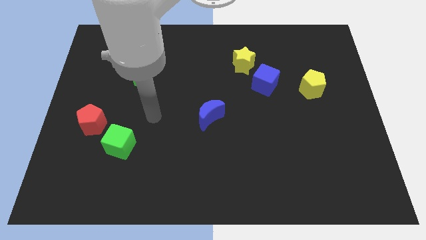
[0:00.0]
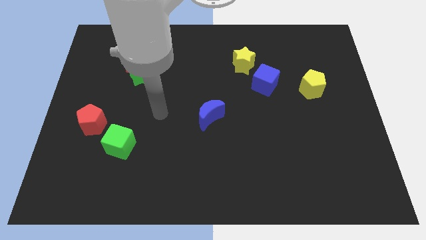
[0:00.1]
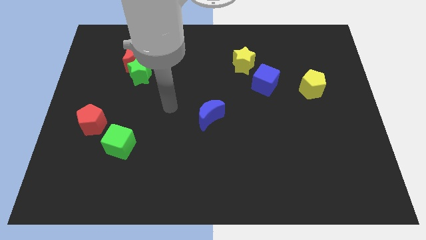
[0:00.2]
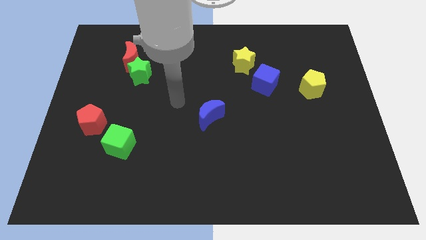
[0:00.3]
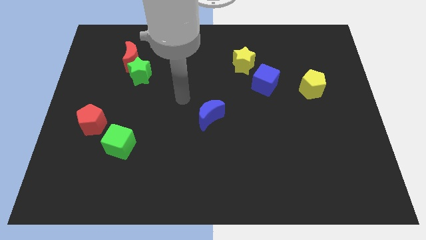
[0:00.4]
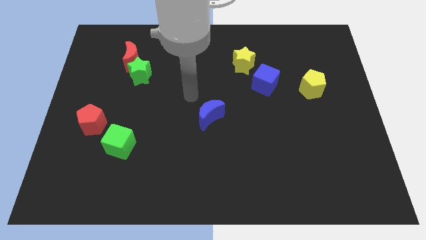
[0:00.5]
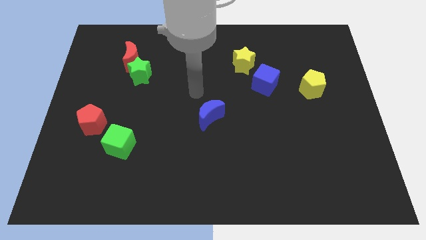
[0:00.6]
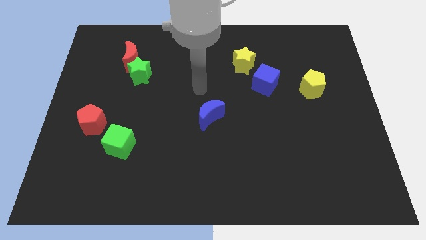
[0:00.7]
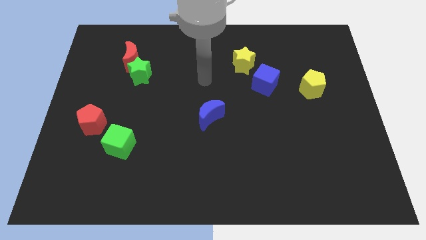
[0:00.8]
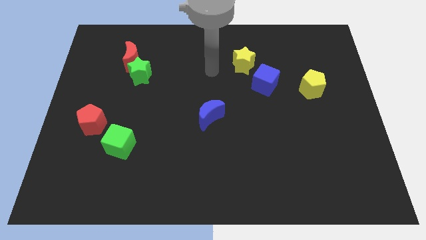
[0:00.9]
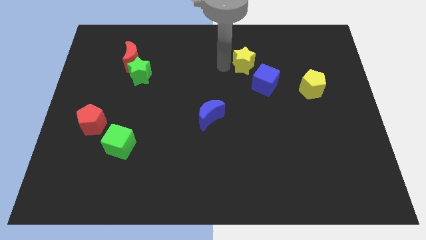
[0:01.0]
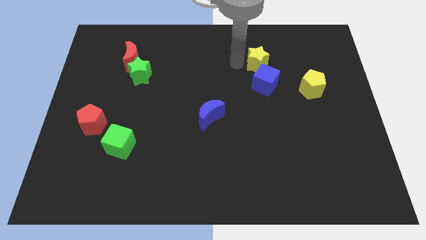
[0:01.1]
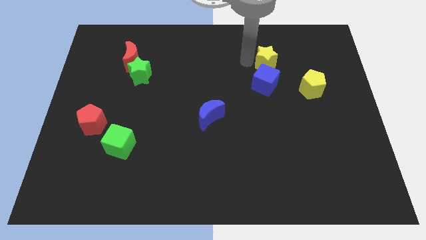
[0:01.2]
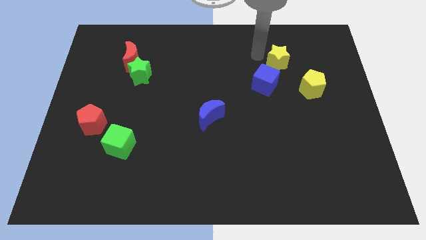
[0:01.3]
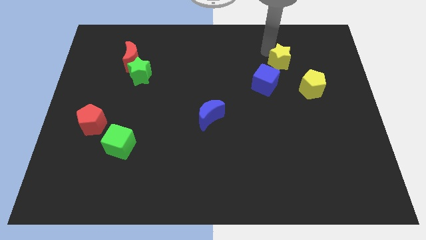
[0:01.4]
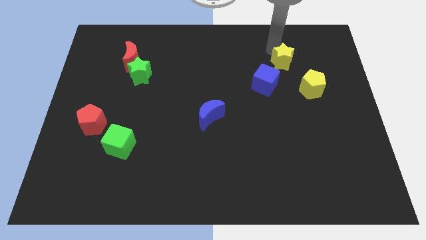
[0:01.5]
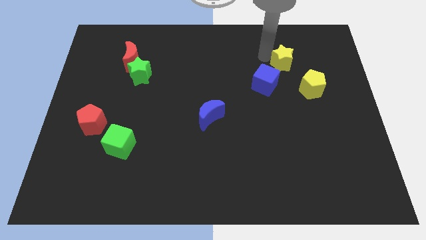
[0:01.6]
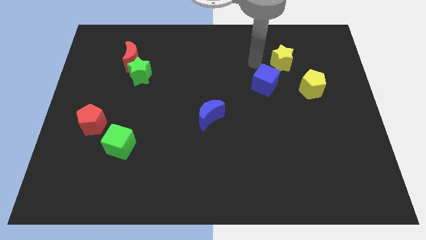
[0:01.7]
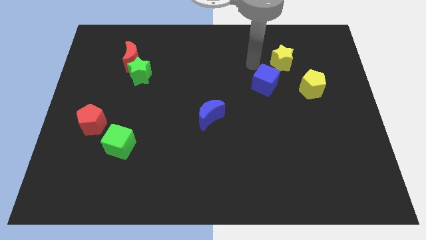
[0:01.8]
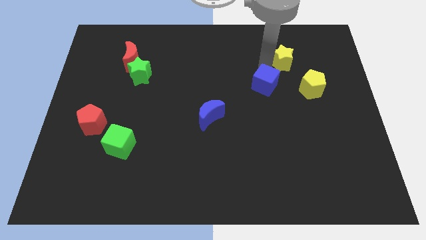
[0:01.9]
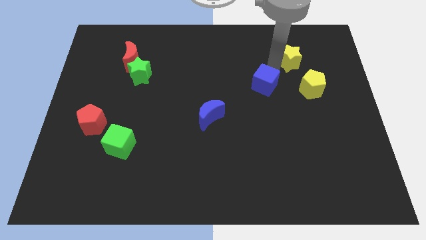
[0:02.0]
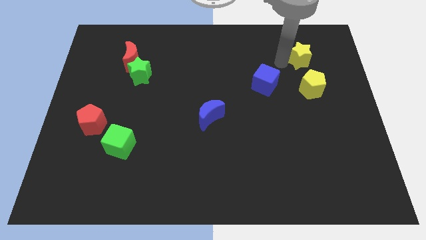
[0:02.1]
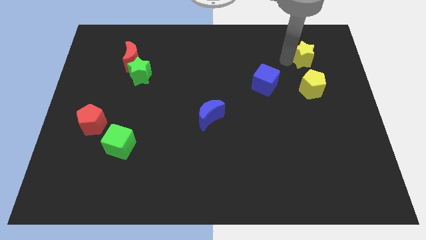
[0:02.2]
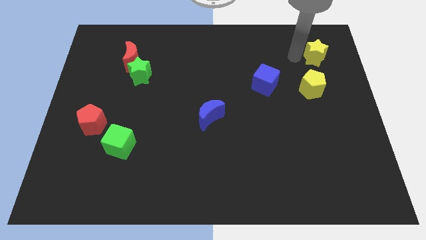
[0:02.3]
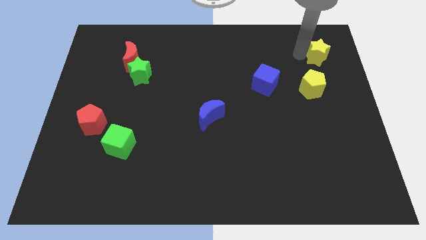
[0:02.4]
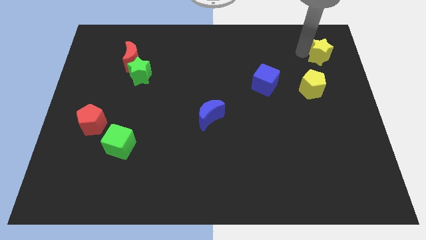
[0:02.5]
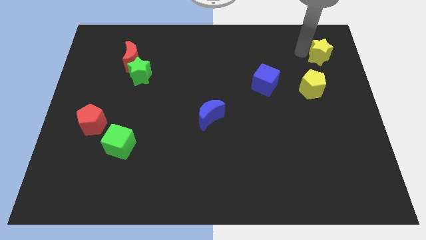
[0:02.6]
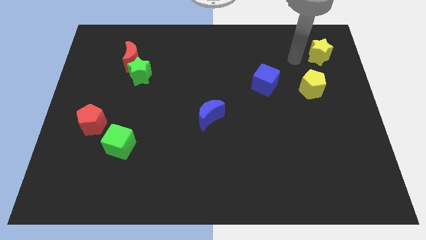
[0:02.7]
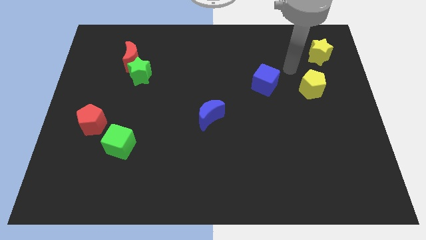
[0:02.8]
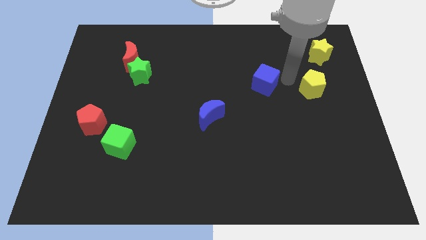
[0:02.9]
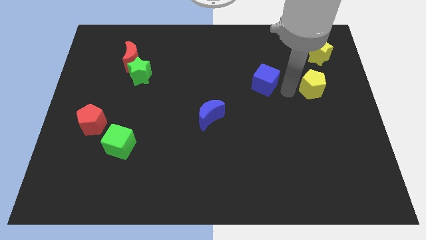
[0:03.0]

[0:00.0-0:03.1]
push the yellow star to the top of the yellow pentagon

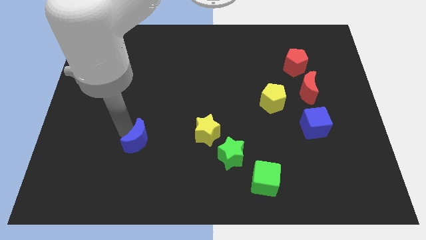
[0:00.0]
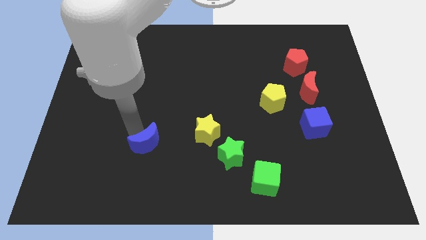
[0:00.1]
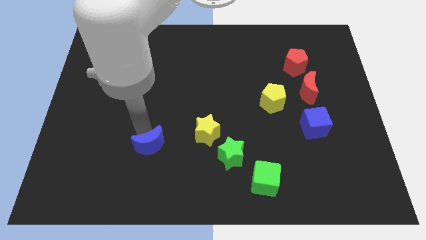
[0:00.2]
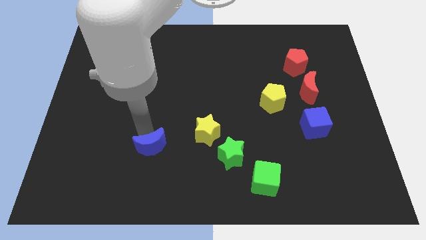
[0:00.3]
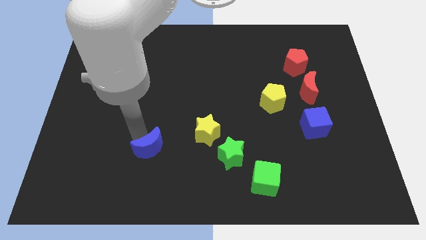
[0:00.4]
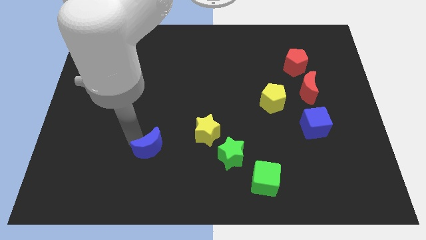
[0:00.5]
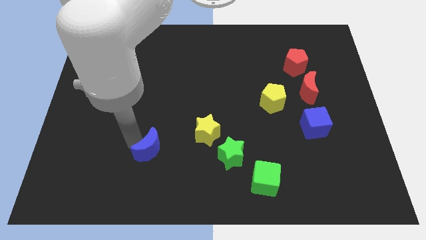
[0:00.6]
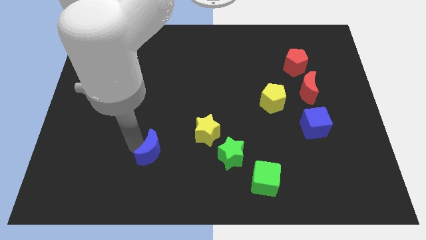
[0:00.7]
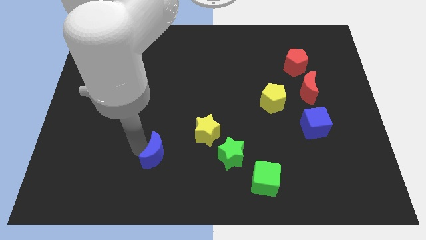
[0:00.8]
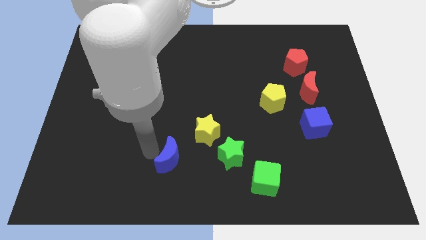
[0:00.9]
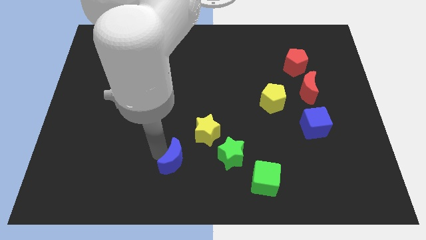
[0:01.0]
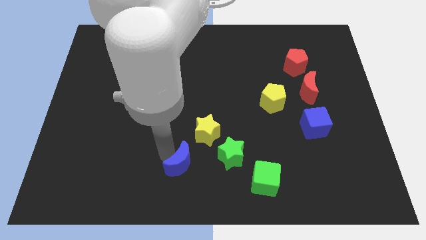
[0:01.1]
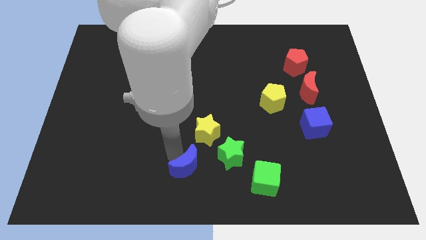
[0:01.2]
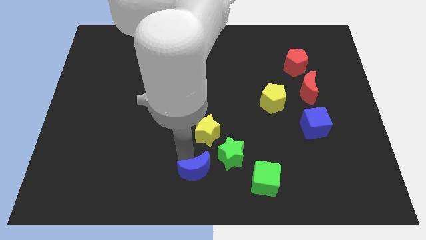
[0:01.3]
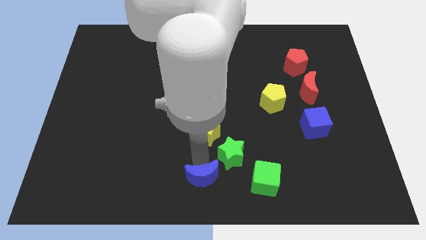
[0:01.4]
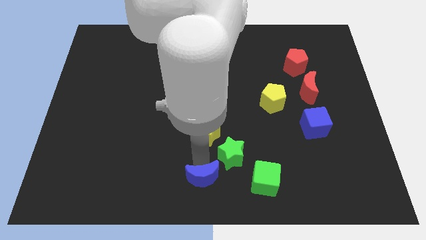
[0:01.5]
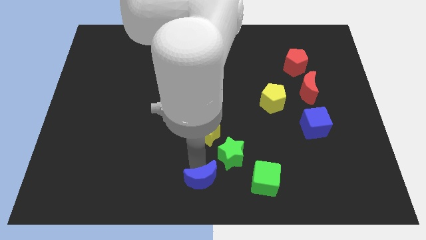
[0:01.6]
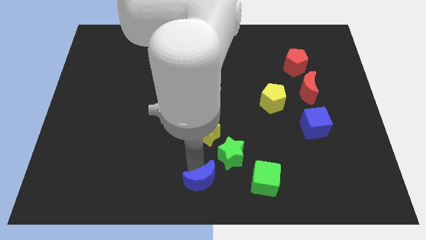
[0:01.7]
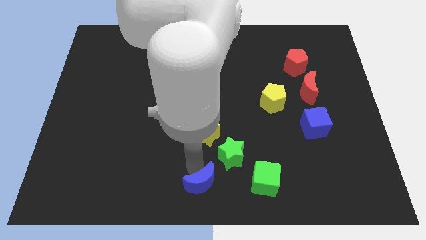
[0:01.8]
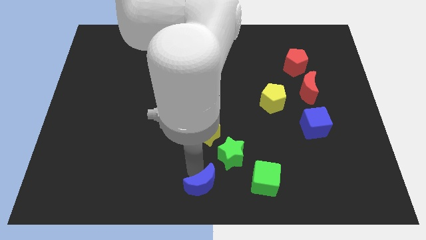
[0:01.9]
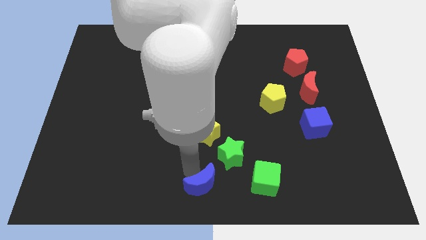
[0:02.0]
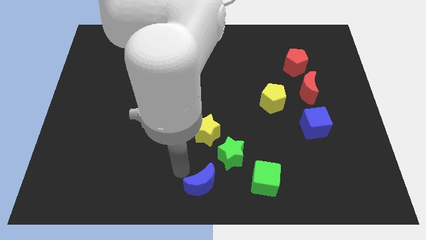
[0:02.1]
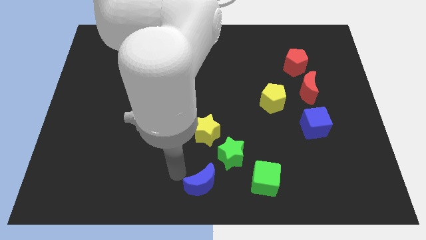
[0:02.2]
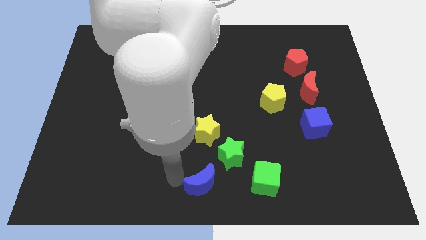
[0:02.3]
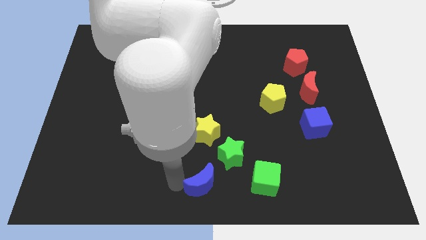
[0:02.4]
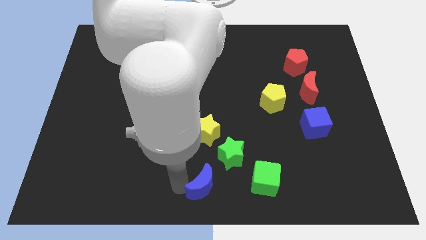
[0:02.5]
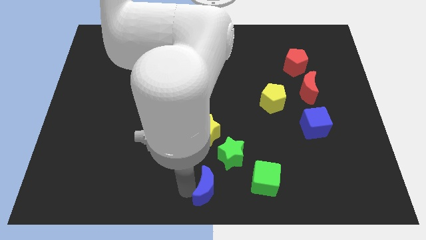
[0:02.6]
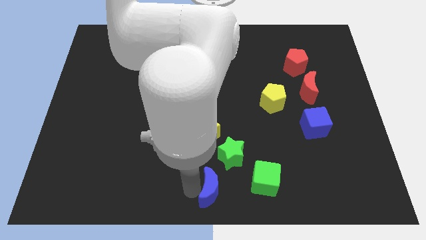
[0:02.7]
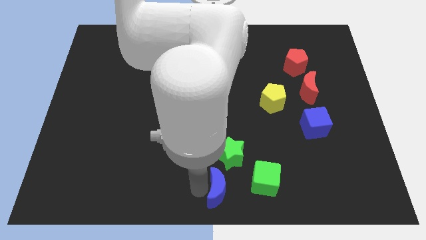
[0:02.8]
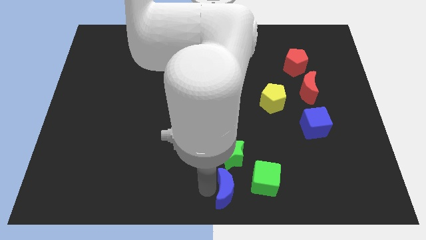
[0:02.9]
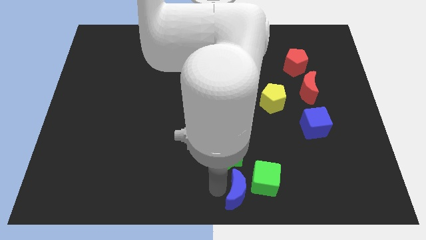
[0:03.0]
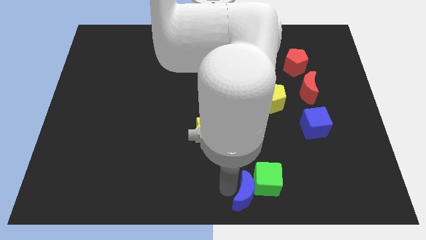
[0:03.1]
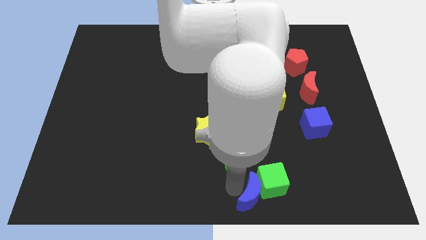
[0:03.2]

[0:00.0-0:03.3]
push the blue moon into the green cube

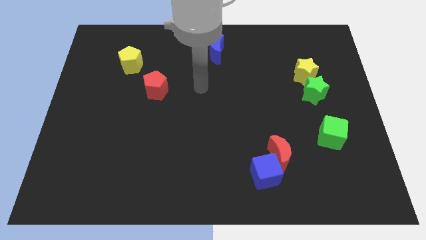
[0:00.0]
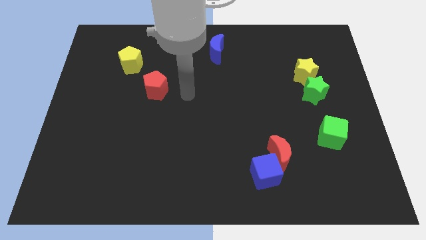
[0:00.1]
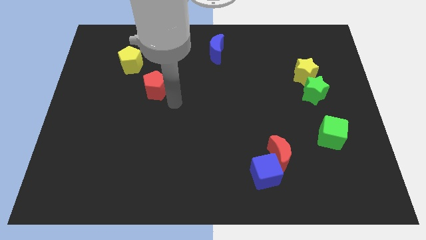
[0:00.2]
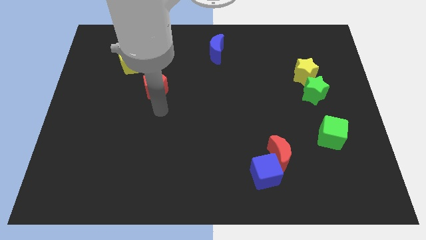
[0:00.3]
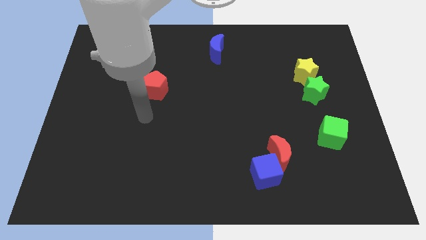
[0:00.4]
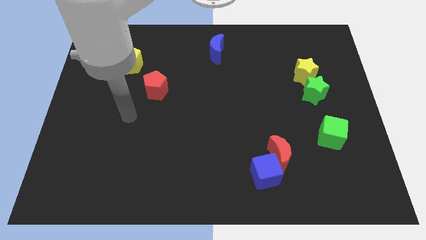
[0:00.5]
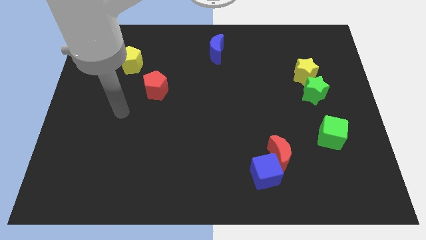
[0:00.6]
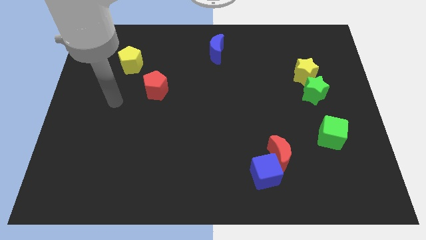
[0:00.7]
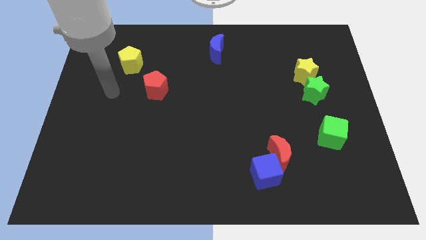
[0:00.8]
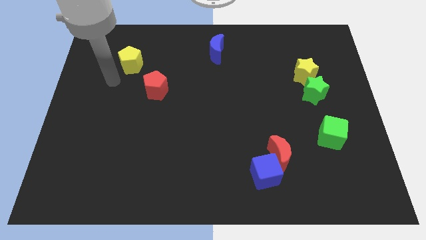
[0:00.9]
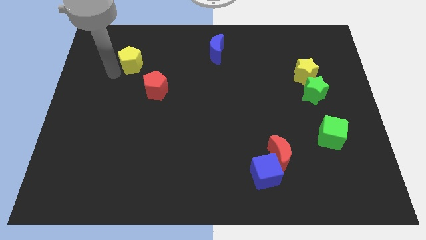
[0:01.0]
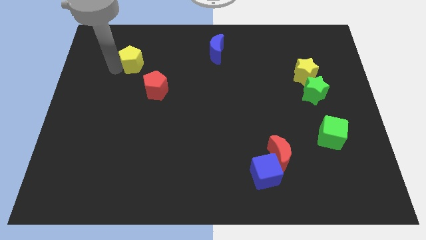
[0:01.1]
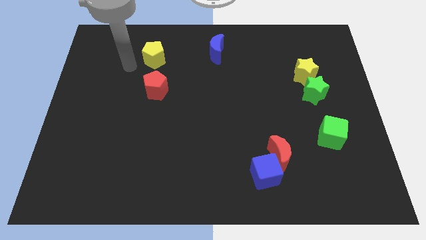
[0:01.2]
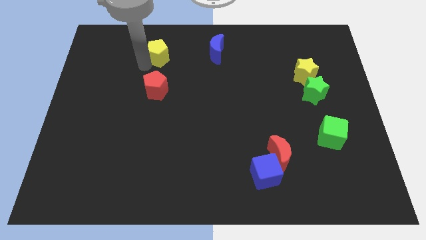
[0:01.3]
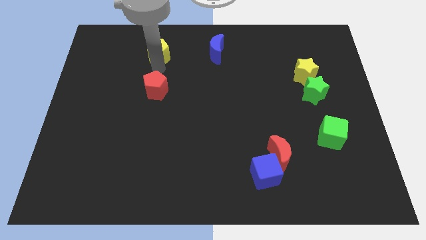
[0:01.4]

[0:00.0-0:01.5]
move yellow pentagon to the top of red pentagon

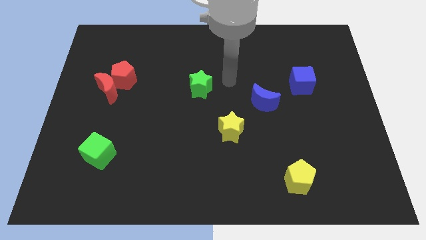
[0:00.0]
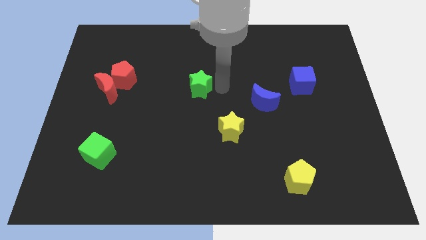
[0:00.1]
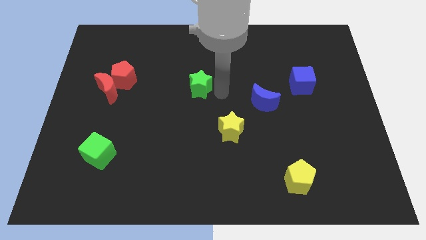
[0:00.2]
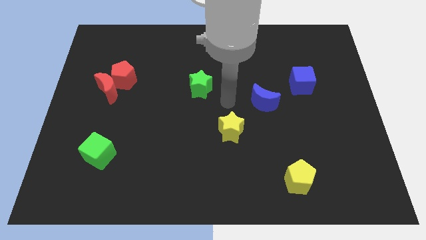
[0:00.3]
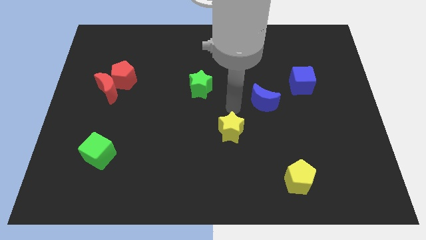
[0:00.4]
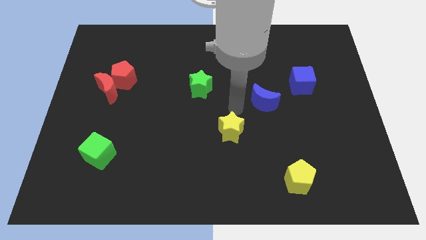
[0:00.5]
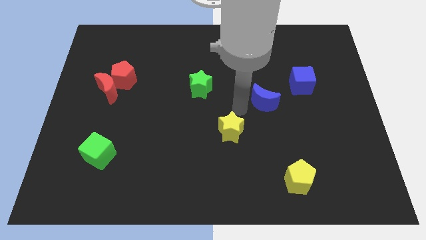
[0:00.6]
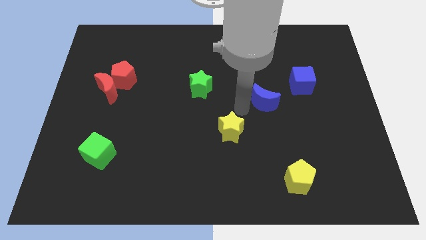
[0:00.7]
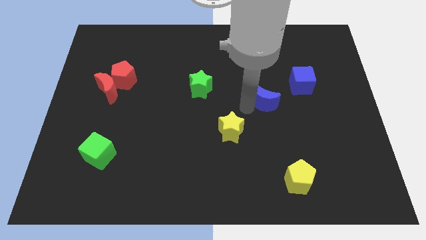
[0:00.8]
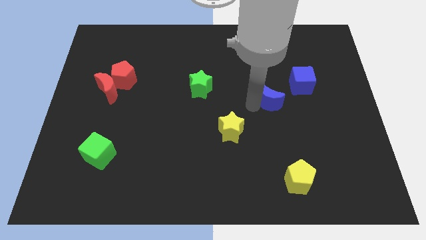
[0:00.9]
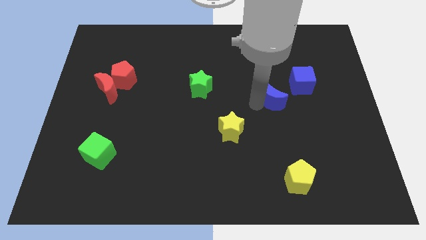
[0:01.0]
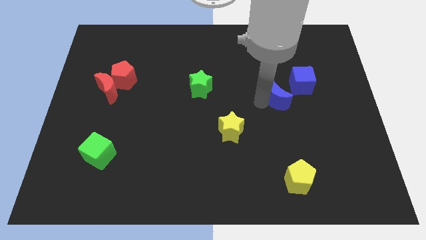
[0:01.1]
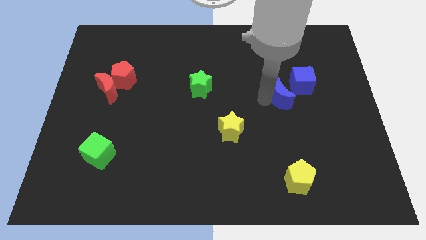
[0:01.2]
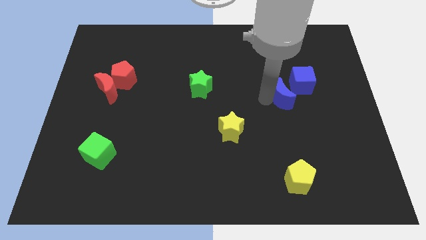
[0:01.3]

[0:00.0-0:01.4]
move the blue crescent to the bottom left side of the blue cube
